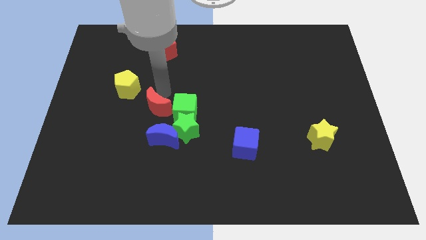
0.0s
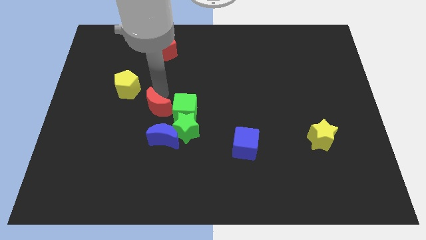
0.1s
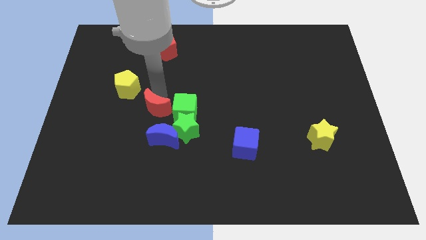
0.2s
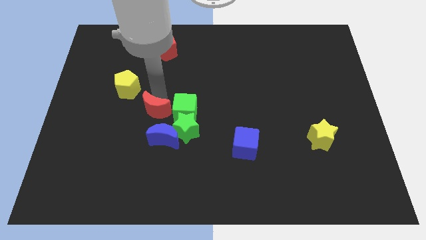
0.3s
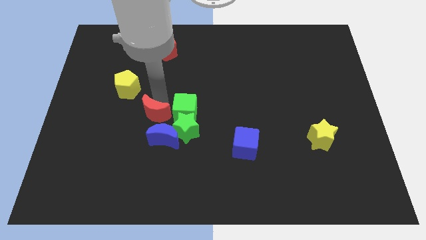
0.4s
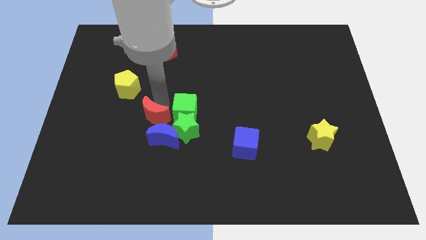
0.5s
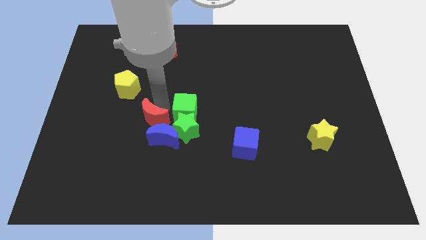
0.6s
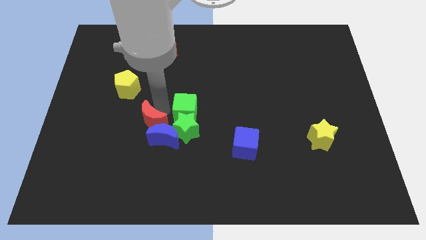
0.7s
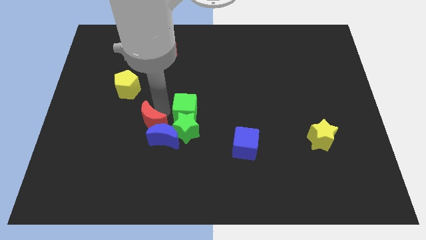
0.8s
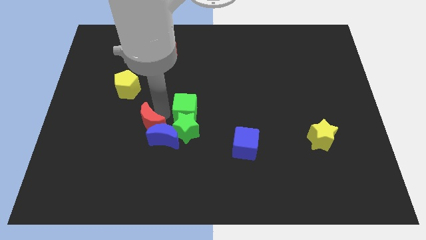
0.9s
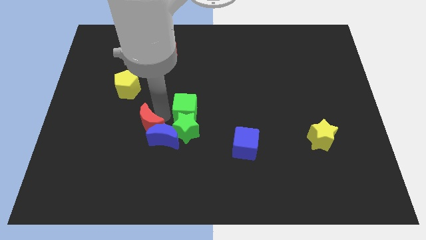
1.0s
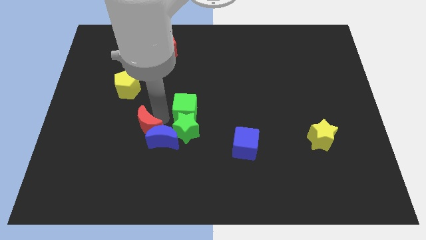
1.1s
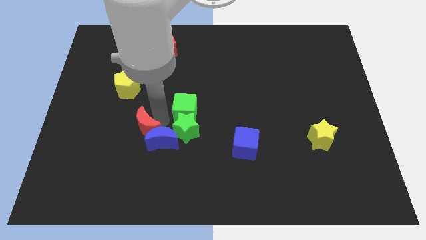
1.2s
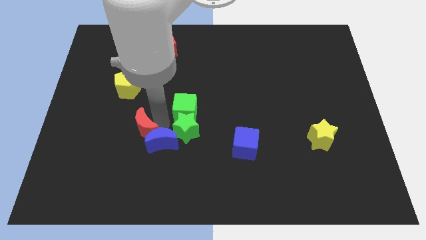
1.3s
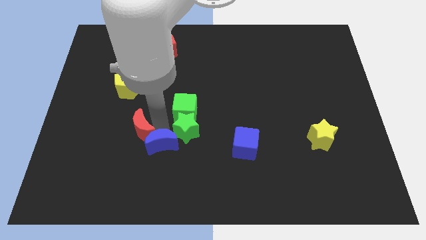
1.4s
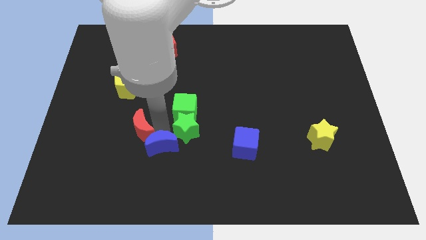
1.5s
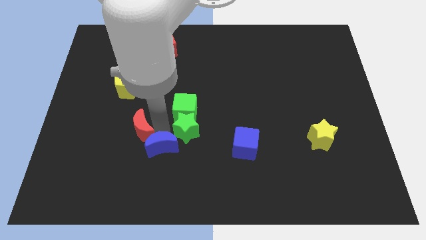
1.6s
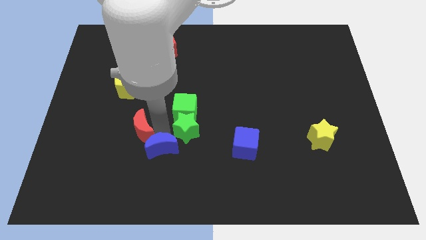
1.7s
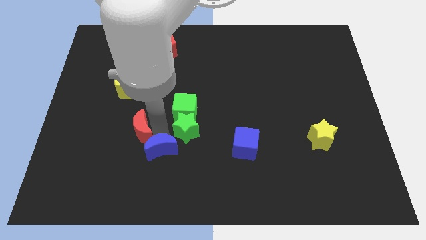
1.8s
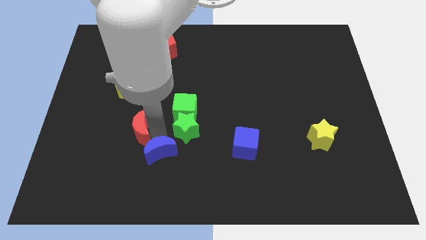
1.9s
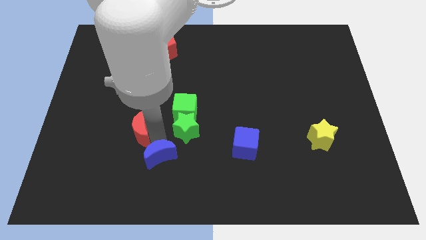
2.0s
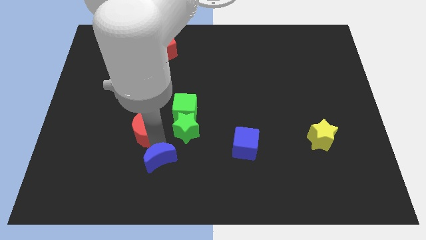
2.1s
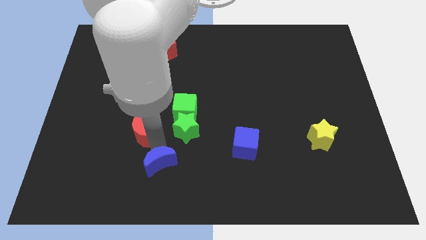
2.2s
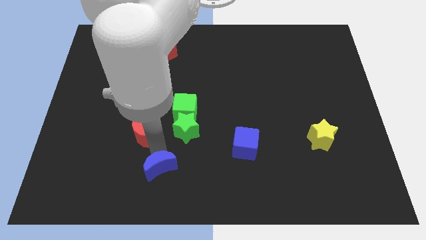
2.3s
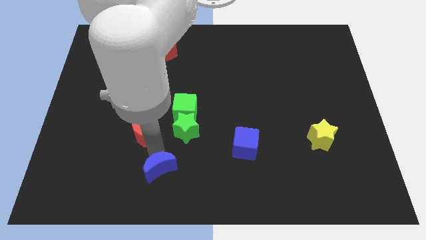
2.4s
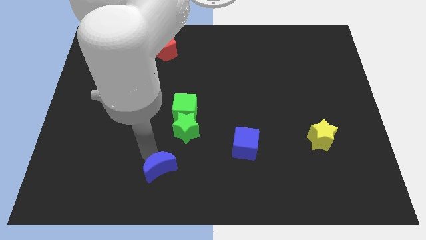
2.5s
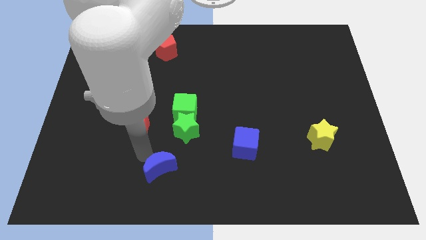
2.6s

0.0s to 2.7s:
push the blue crescent towards the bottom of the board

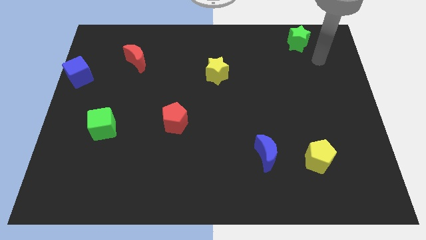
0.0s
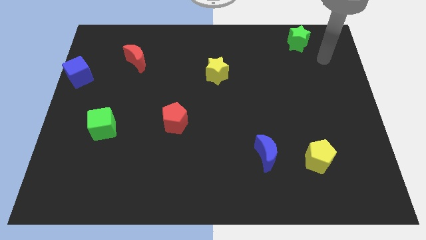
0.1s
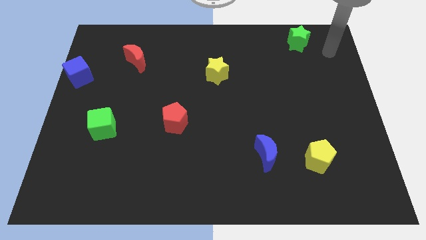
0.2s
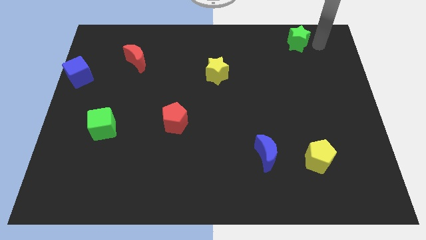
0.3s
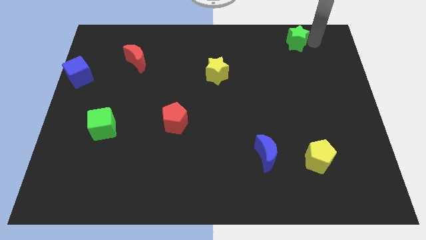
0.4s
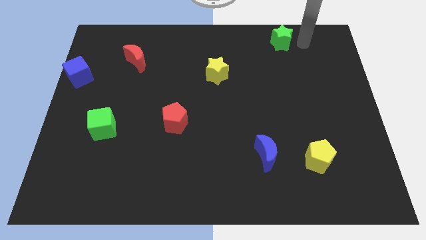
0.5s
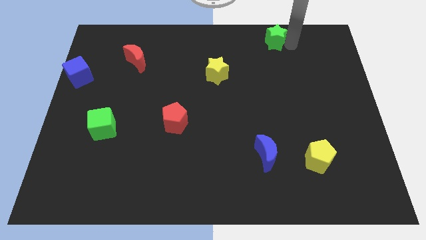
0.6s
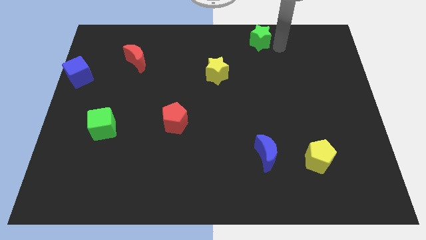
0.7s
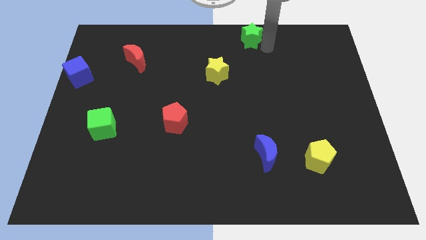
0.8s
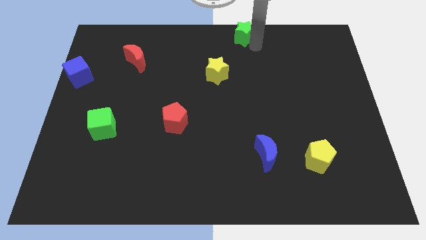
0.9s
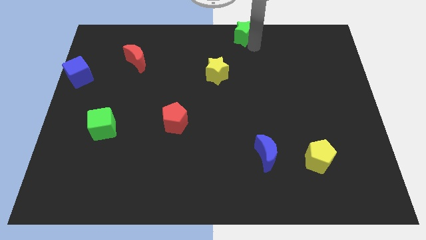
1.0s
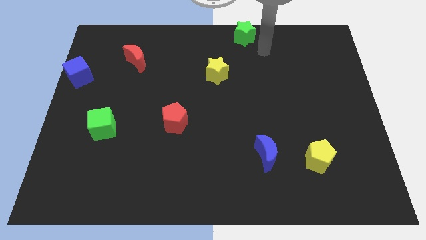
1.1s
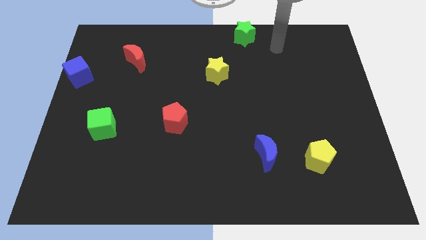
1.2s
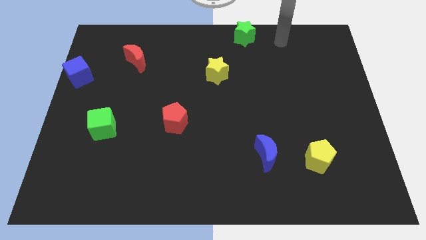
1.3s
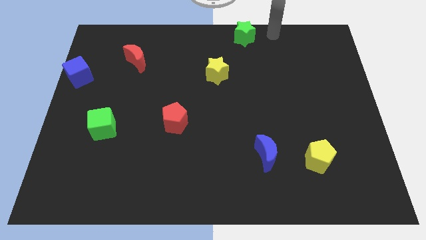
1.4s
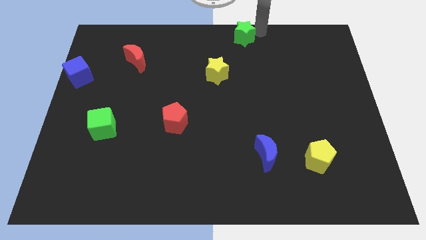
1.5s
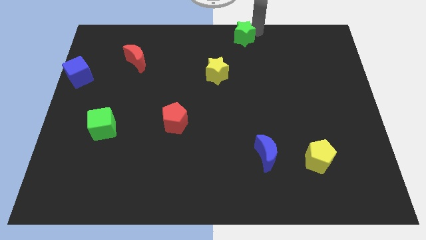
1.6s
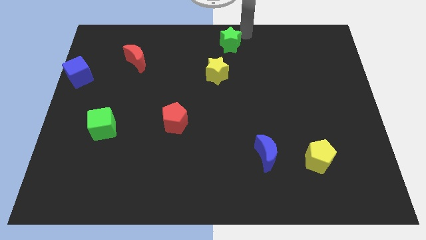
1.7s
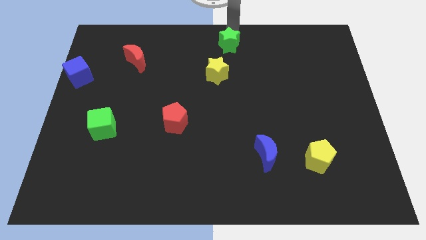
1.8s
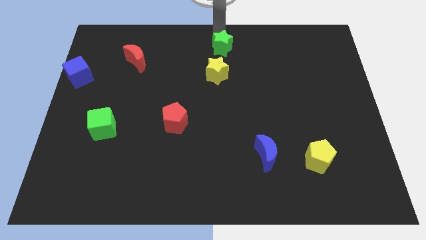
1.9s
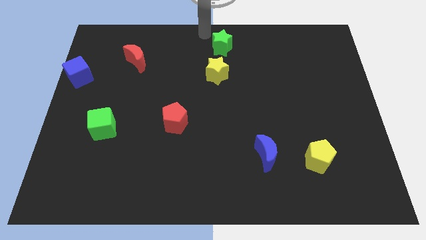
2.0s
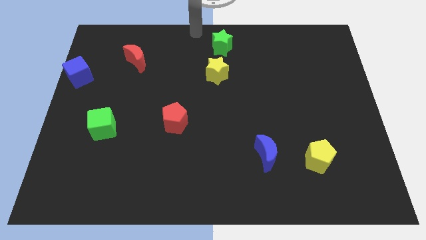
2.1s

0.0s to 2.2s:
place the green star on top of yellow star

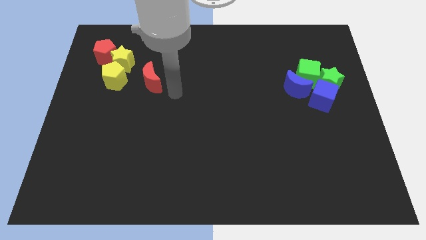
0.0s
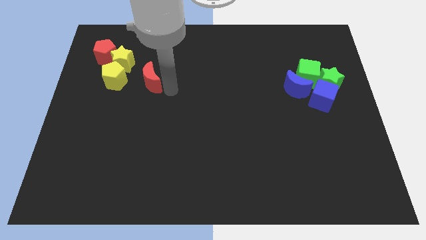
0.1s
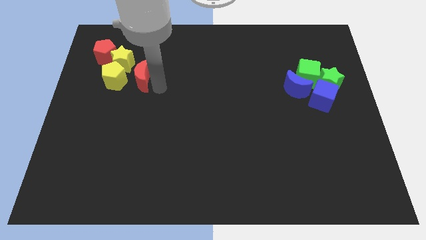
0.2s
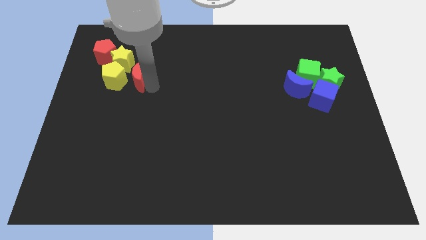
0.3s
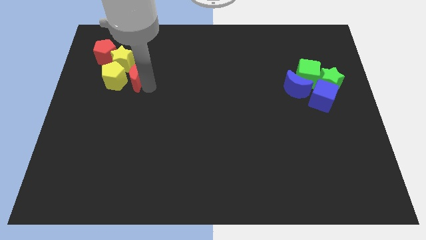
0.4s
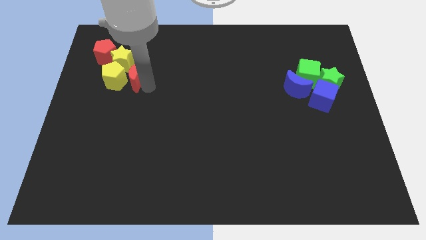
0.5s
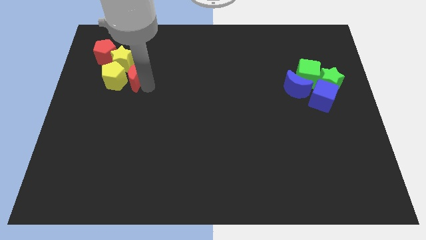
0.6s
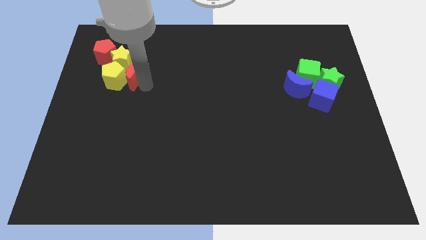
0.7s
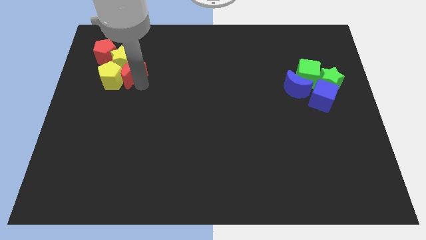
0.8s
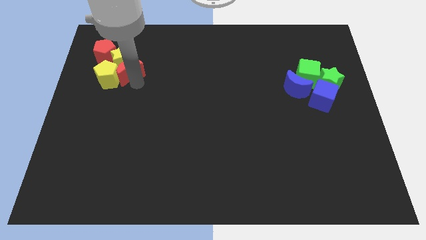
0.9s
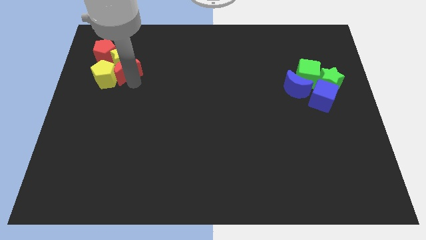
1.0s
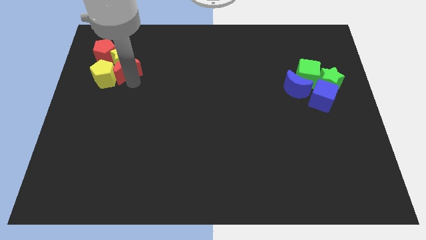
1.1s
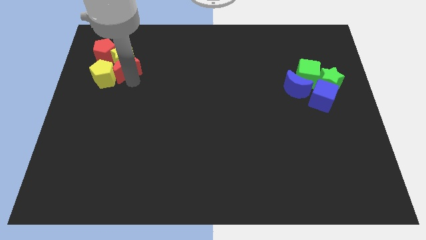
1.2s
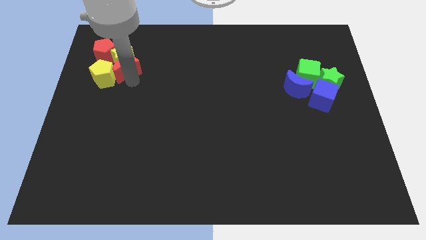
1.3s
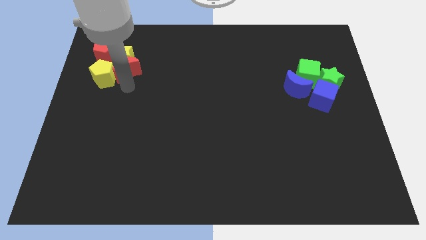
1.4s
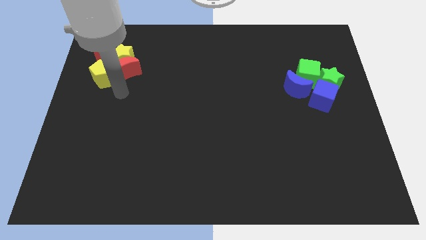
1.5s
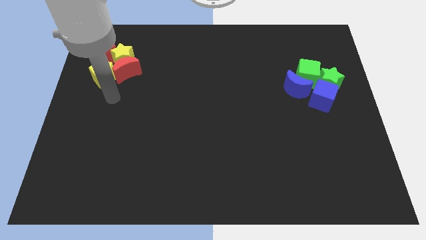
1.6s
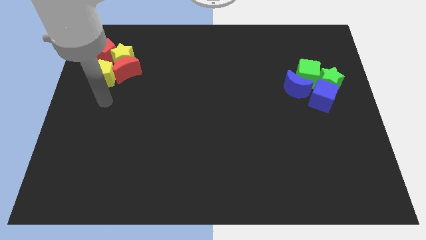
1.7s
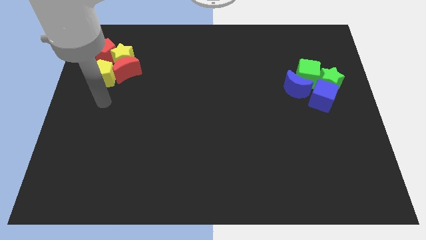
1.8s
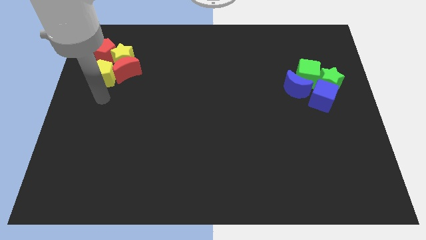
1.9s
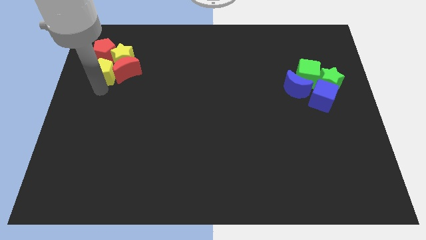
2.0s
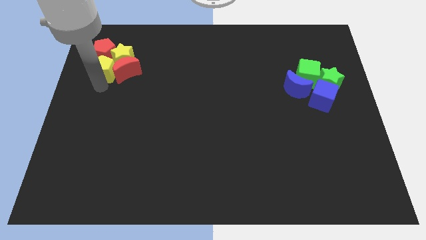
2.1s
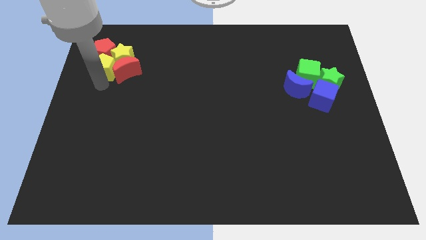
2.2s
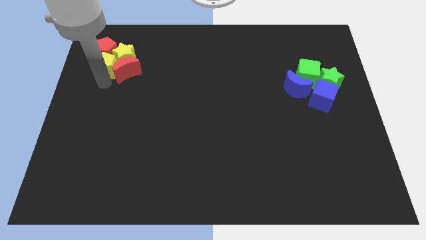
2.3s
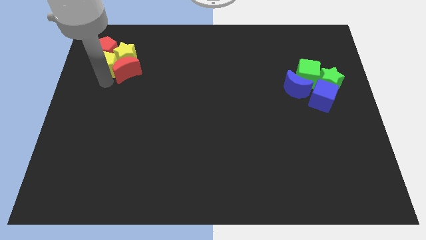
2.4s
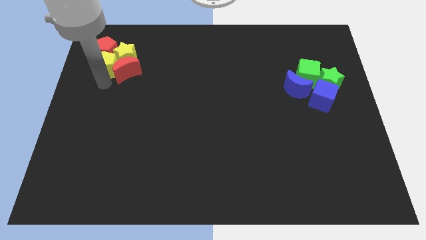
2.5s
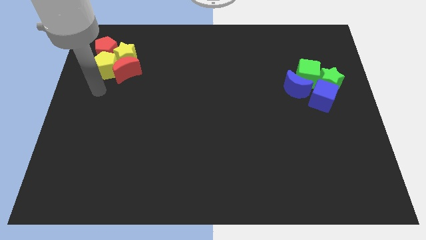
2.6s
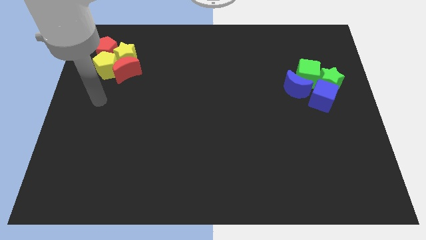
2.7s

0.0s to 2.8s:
push the red crescent into the yellow star and yellow pentagon

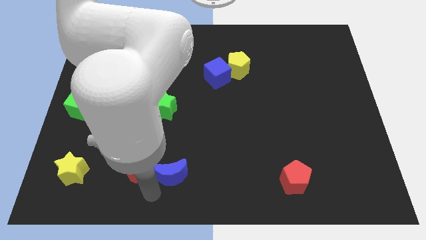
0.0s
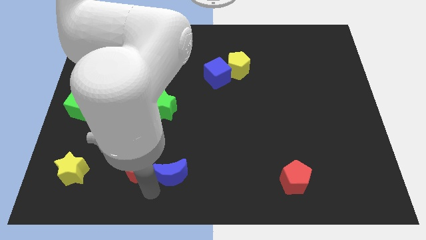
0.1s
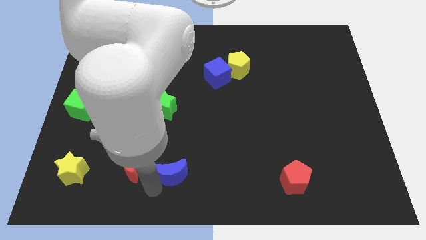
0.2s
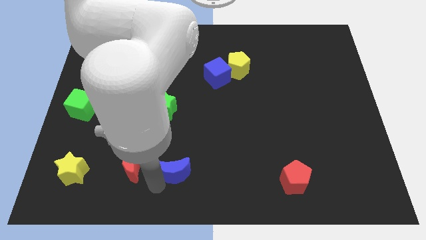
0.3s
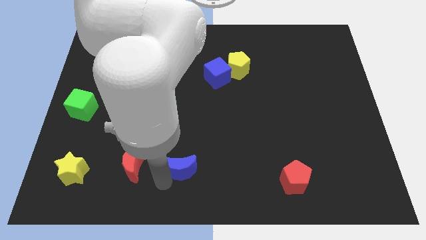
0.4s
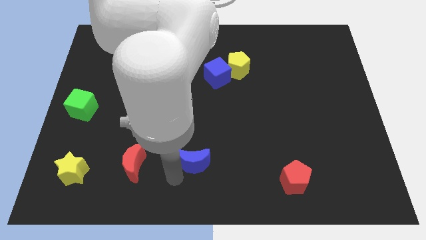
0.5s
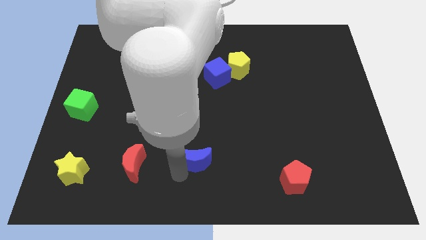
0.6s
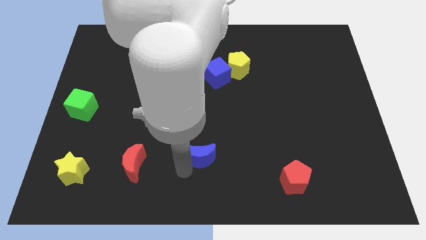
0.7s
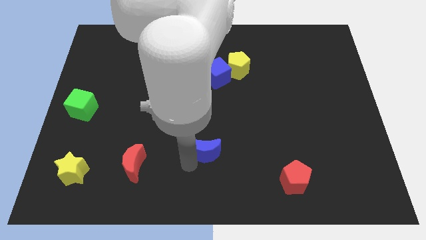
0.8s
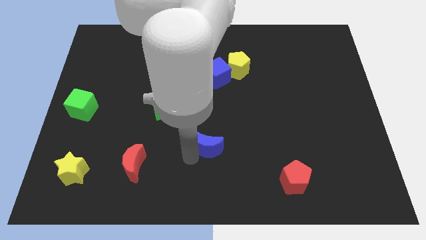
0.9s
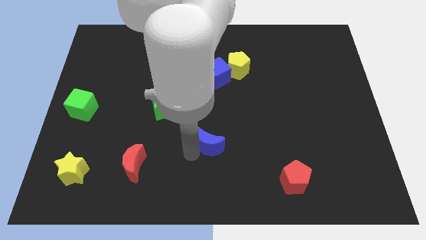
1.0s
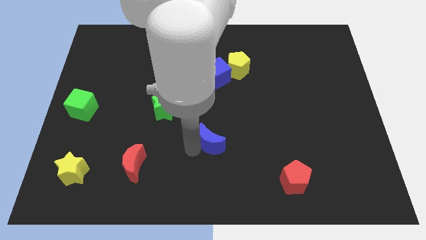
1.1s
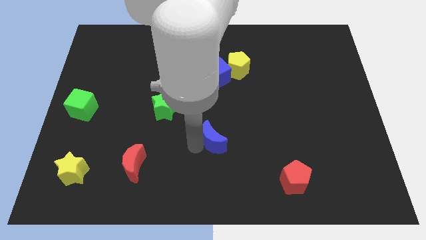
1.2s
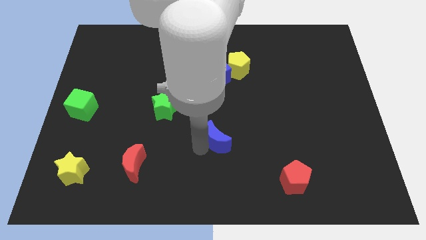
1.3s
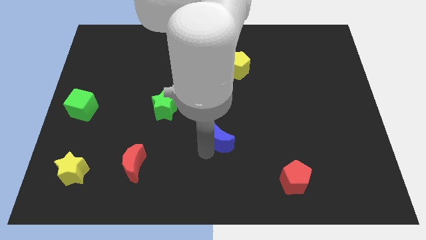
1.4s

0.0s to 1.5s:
move the blue crescent in between the green star and red pentagon
